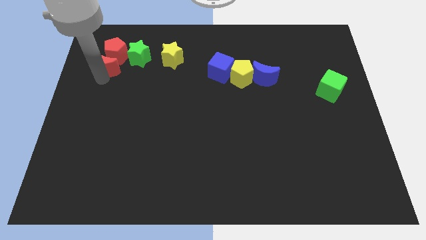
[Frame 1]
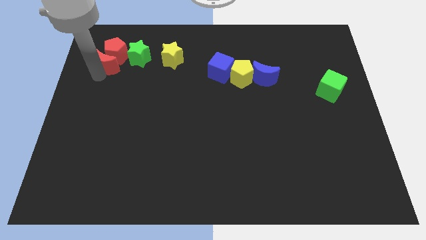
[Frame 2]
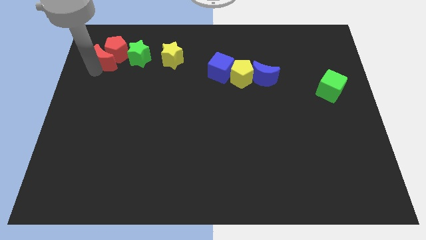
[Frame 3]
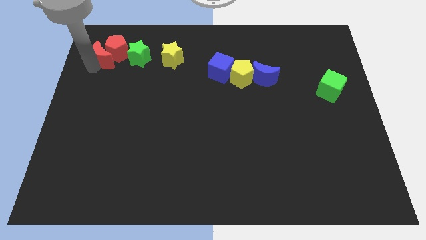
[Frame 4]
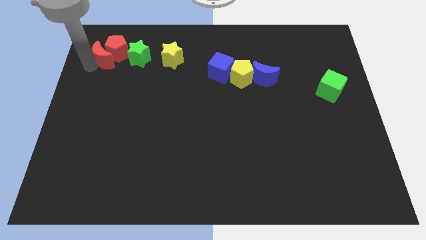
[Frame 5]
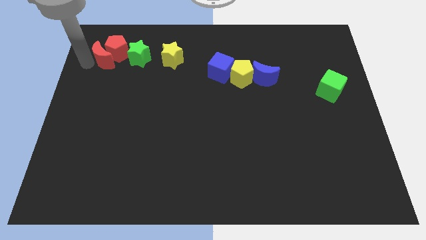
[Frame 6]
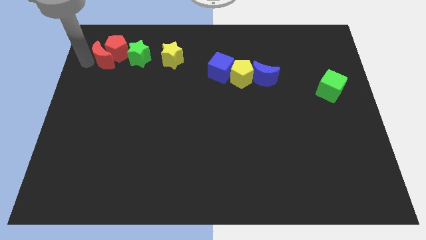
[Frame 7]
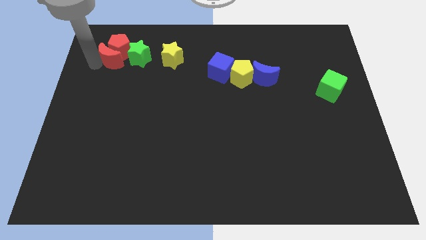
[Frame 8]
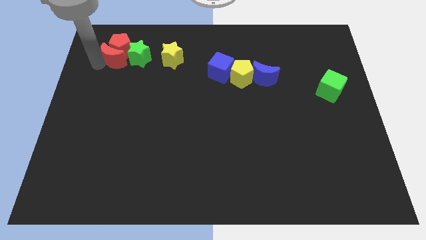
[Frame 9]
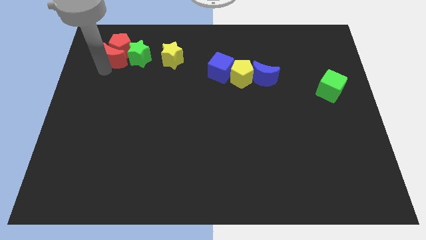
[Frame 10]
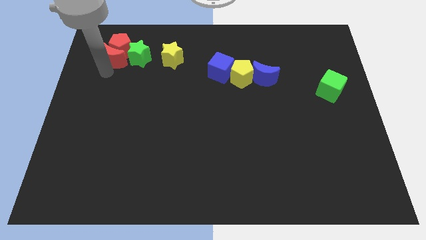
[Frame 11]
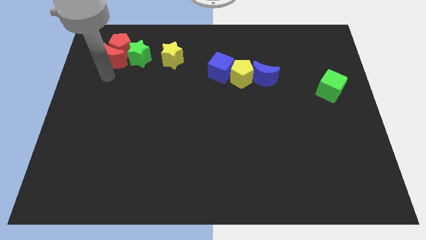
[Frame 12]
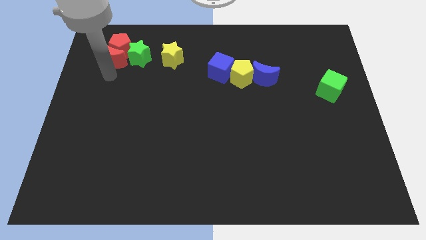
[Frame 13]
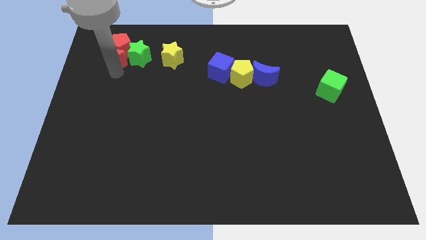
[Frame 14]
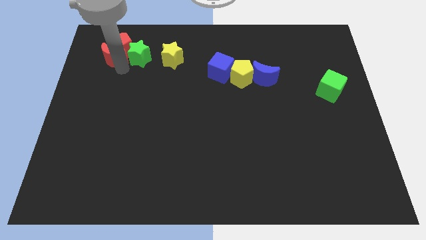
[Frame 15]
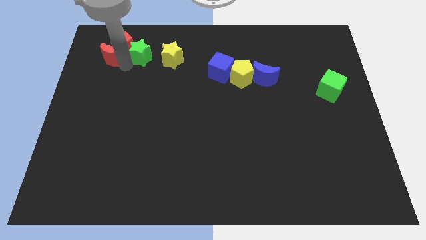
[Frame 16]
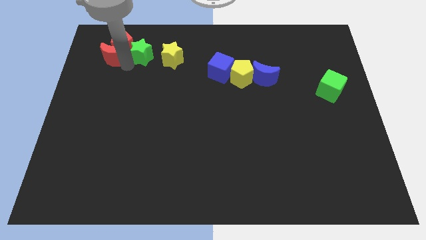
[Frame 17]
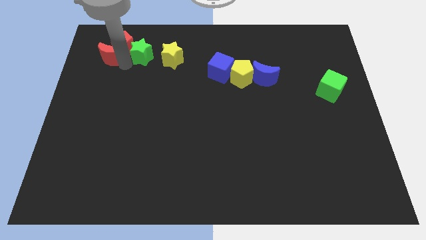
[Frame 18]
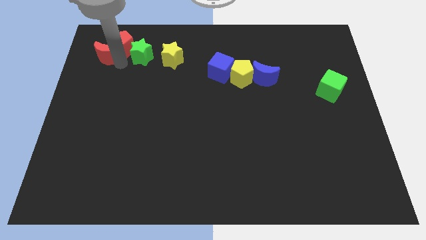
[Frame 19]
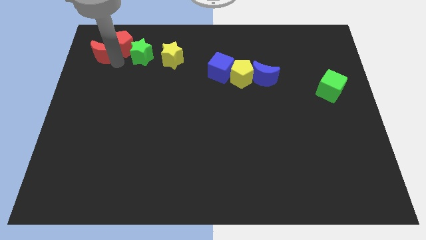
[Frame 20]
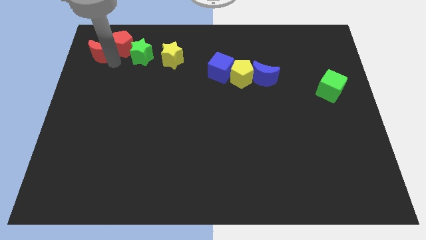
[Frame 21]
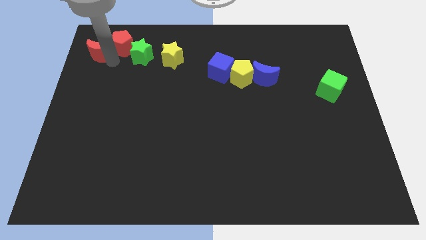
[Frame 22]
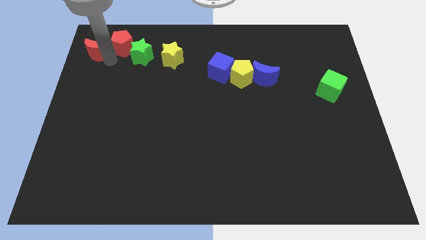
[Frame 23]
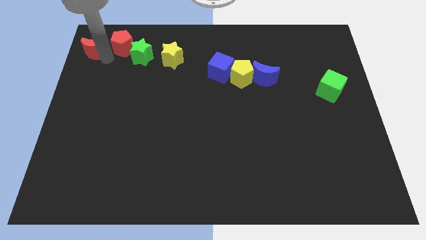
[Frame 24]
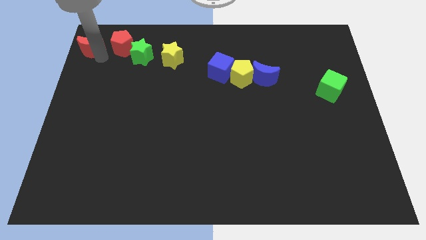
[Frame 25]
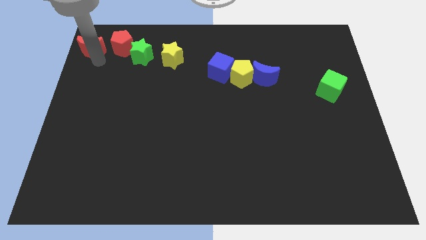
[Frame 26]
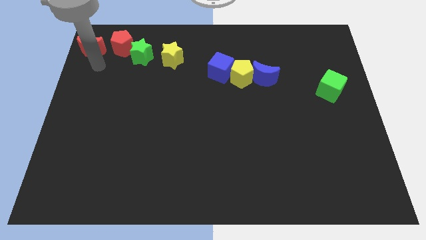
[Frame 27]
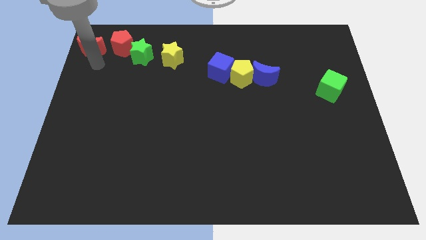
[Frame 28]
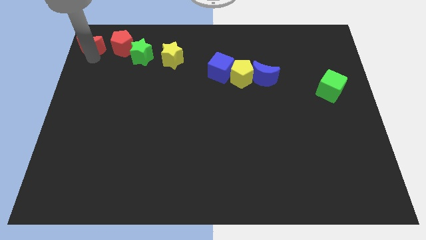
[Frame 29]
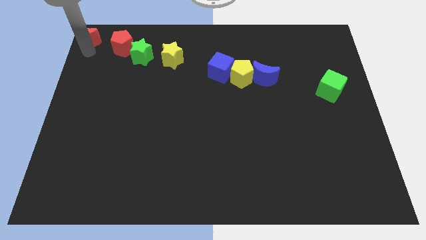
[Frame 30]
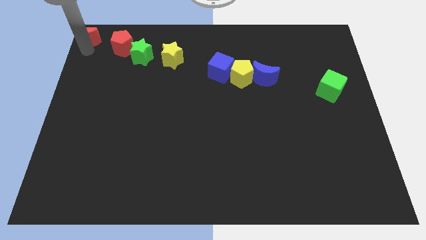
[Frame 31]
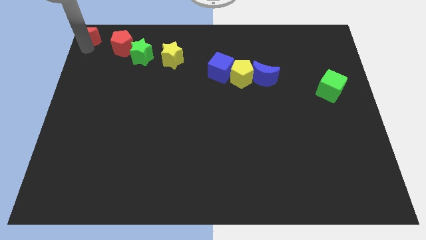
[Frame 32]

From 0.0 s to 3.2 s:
separate red moon from red pentagon

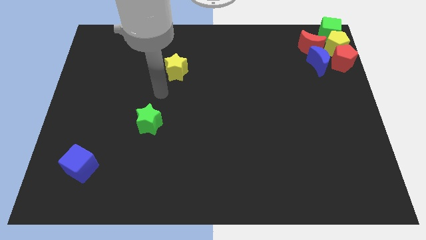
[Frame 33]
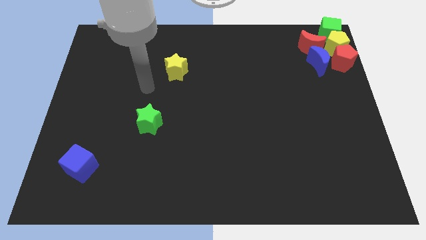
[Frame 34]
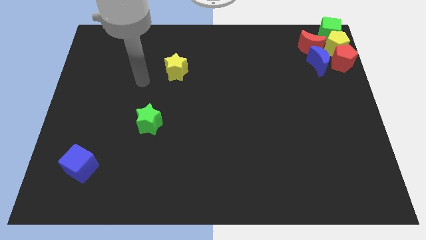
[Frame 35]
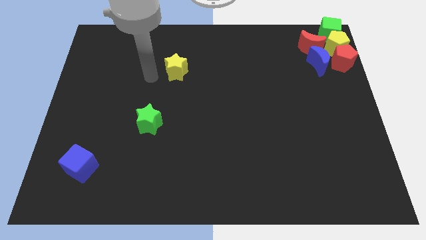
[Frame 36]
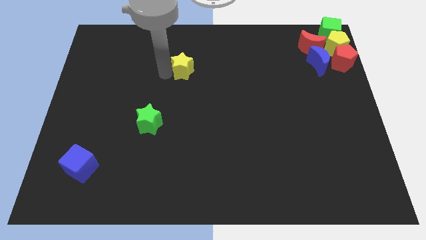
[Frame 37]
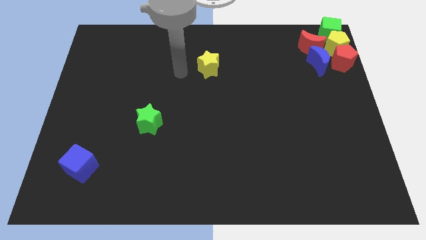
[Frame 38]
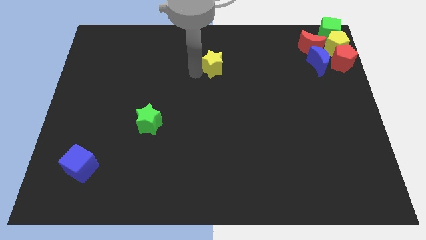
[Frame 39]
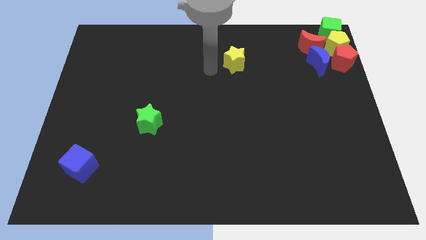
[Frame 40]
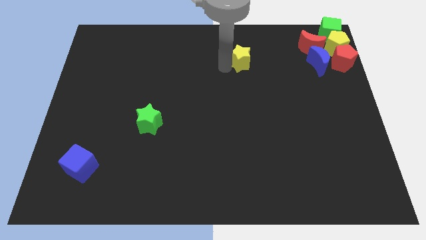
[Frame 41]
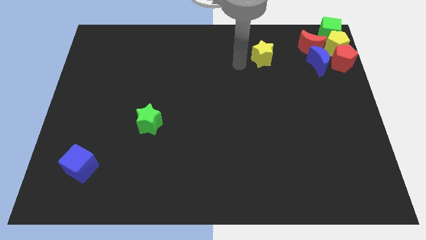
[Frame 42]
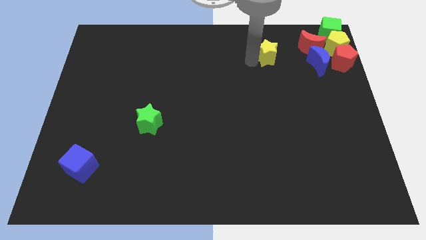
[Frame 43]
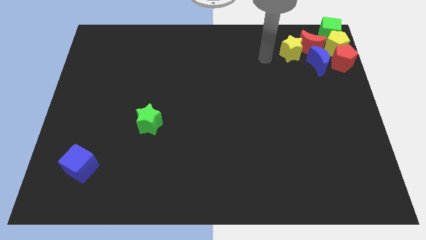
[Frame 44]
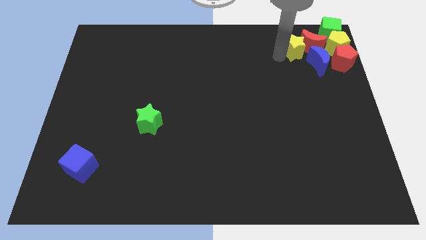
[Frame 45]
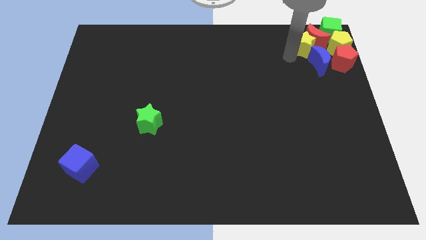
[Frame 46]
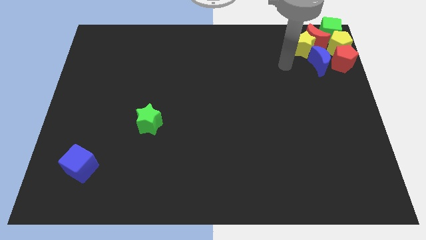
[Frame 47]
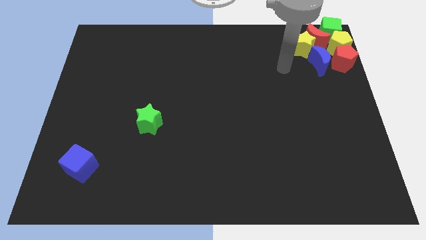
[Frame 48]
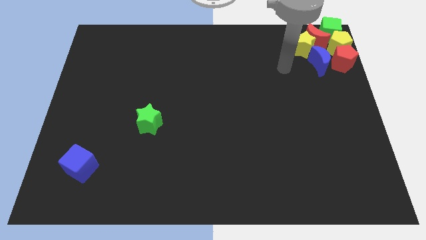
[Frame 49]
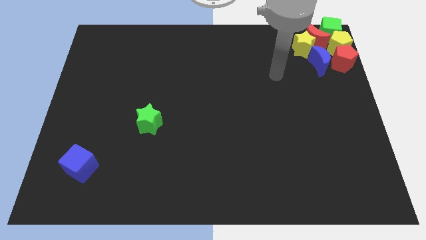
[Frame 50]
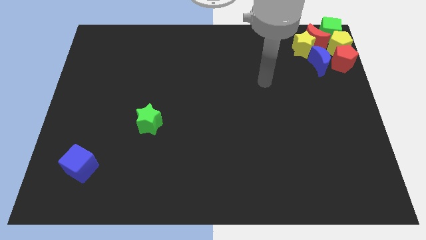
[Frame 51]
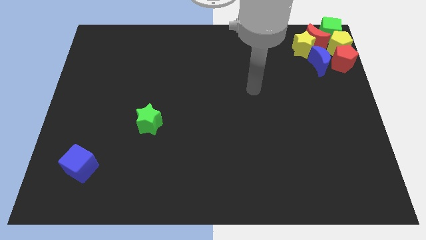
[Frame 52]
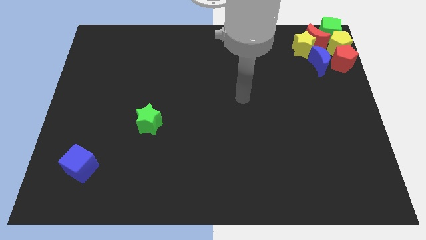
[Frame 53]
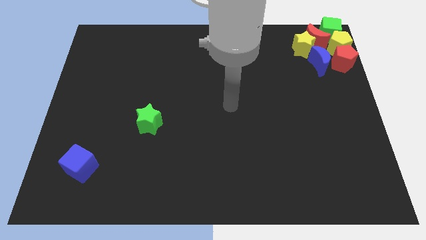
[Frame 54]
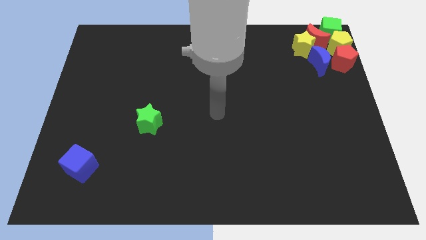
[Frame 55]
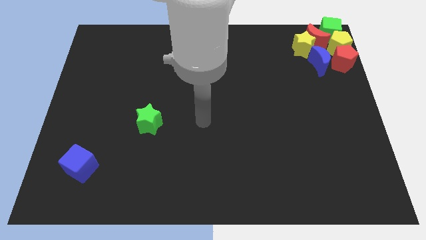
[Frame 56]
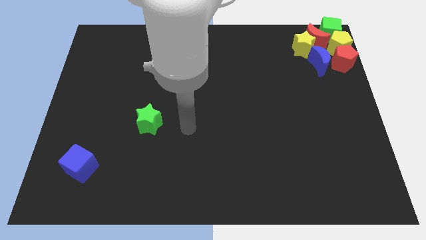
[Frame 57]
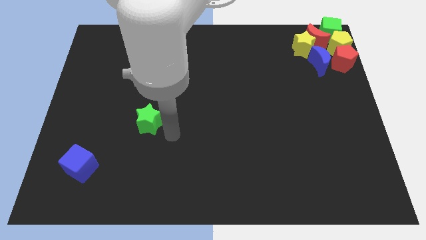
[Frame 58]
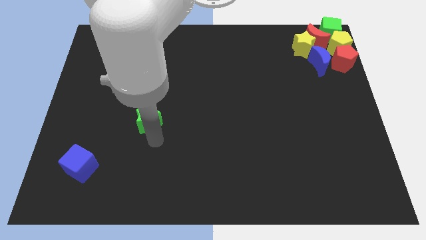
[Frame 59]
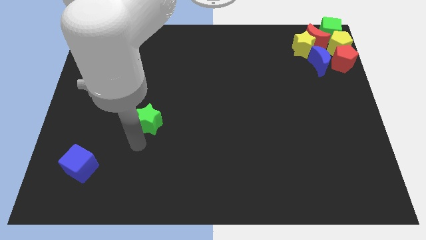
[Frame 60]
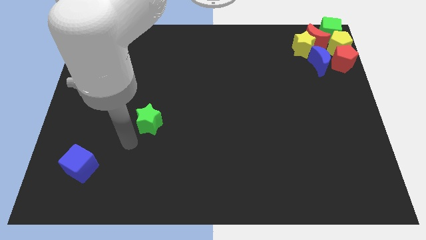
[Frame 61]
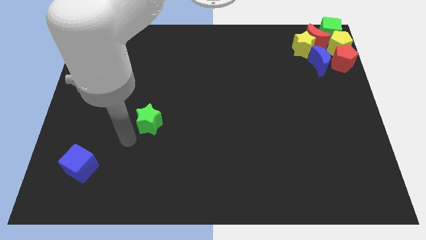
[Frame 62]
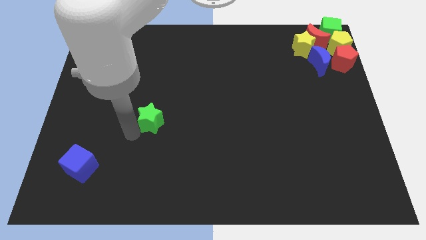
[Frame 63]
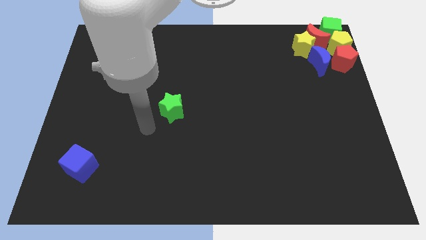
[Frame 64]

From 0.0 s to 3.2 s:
push the yellow star into the group of blocks

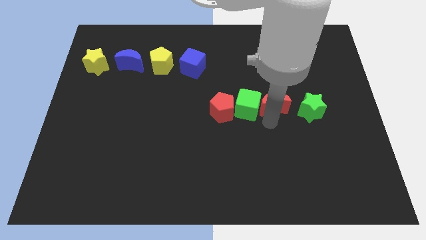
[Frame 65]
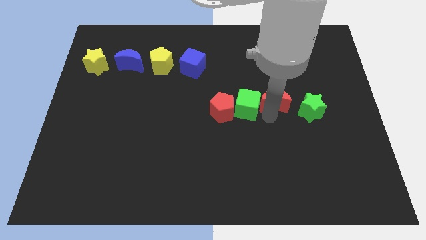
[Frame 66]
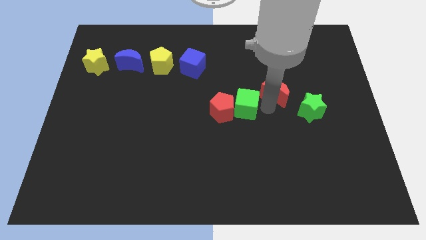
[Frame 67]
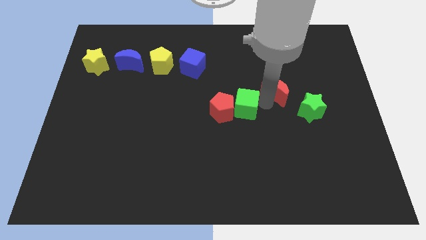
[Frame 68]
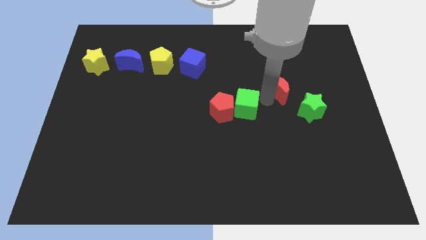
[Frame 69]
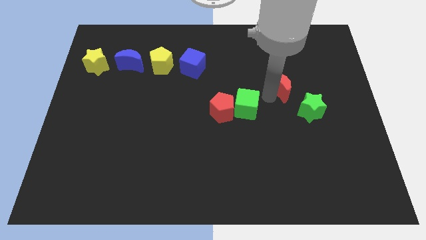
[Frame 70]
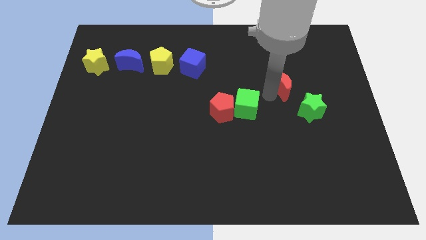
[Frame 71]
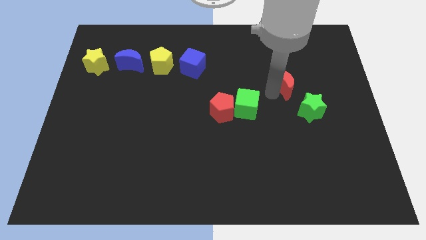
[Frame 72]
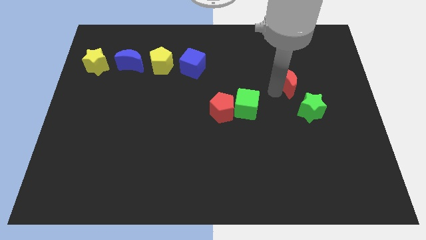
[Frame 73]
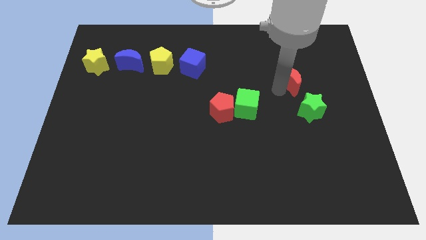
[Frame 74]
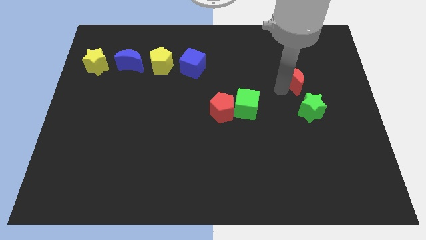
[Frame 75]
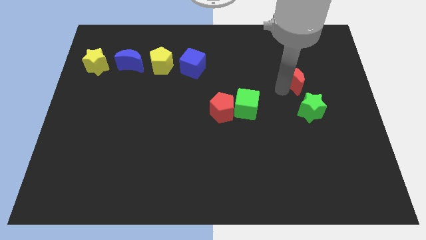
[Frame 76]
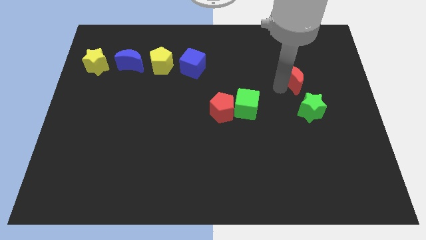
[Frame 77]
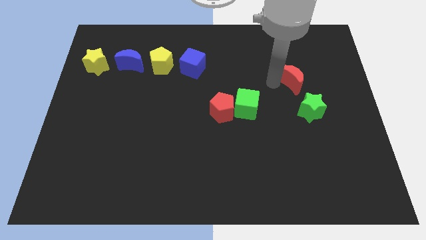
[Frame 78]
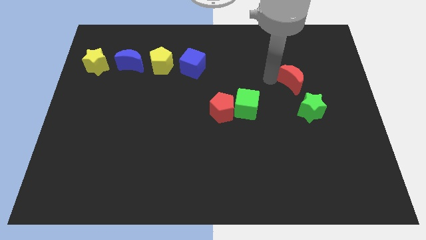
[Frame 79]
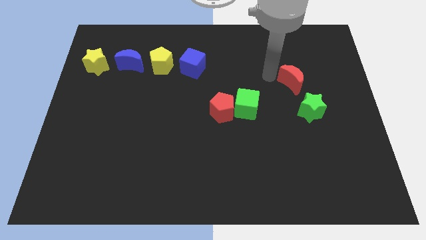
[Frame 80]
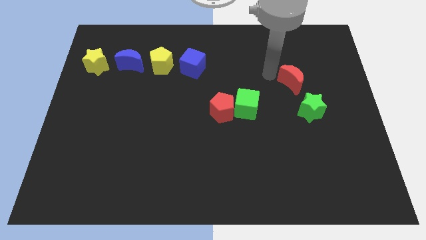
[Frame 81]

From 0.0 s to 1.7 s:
separate red moon from green cube

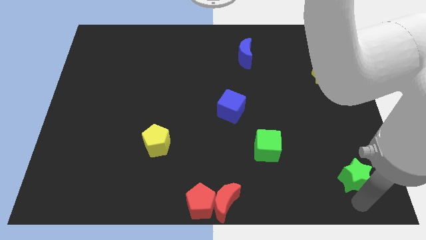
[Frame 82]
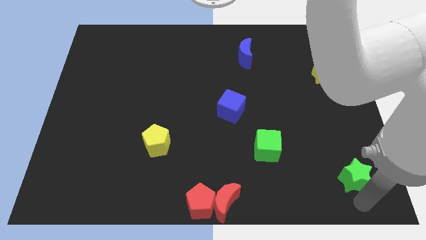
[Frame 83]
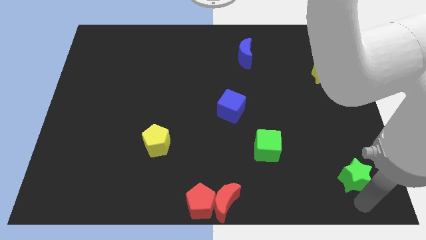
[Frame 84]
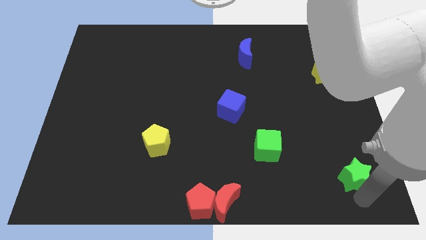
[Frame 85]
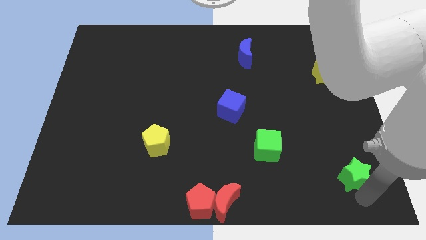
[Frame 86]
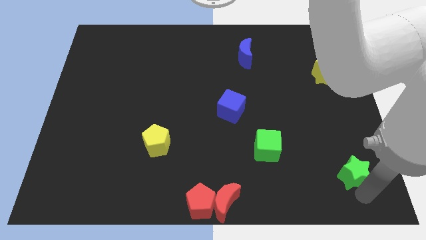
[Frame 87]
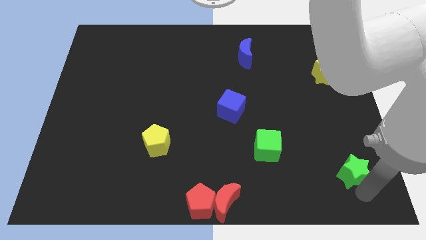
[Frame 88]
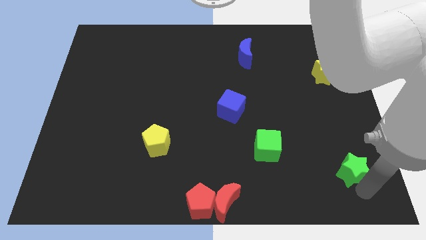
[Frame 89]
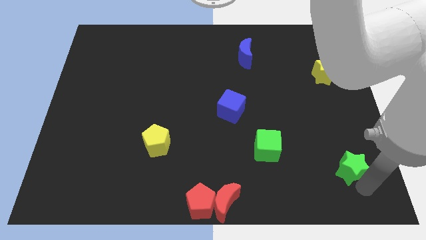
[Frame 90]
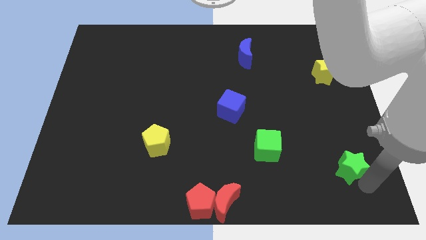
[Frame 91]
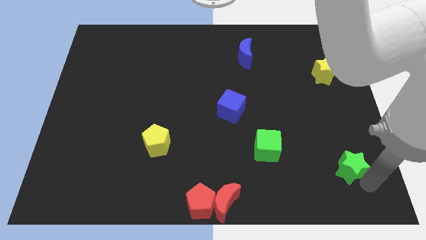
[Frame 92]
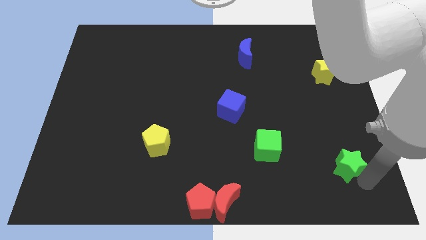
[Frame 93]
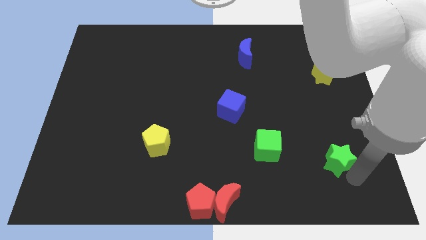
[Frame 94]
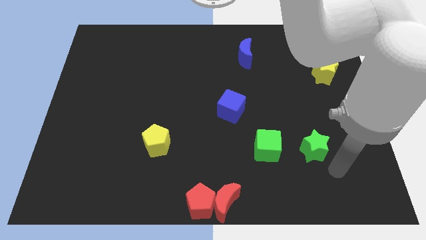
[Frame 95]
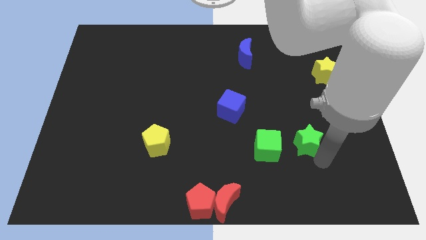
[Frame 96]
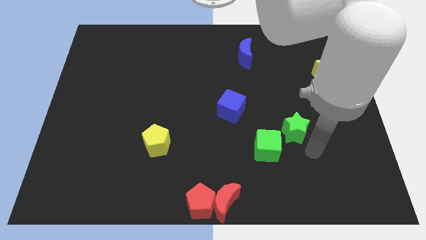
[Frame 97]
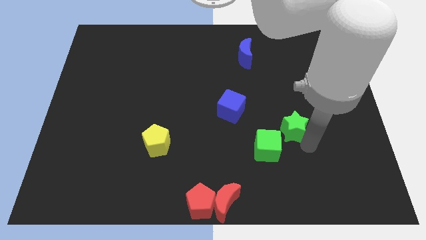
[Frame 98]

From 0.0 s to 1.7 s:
move the green star close to the green cube
